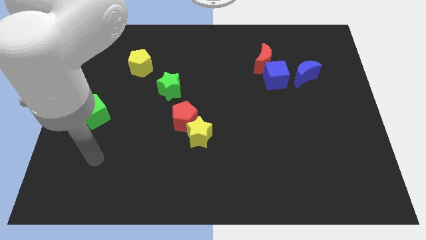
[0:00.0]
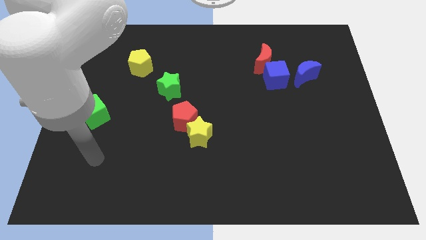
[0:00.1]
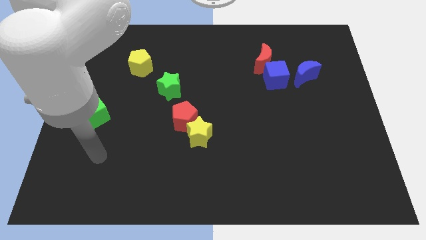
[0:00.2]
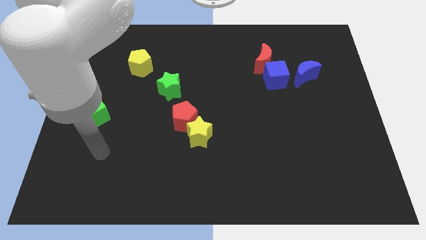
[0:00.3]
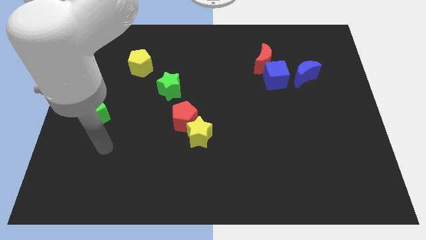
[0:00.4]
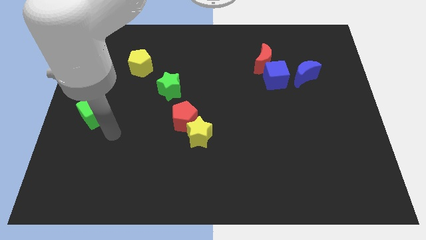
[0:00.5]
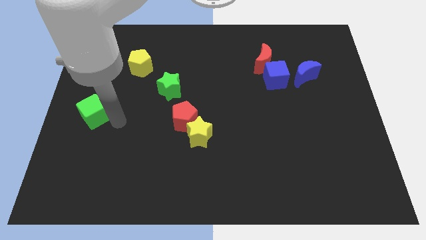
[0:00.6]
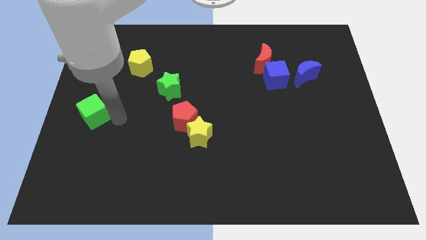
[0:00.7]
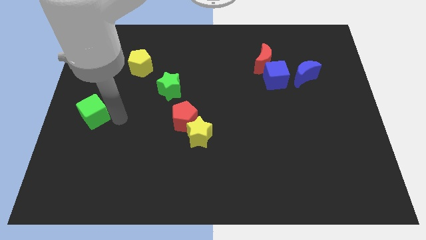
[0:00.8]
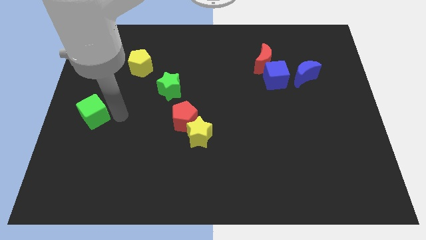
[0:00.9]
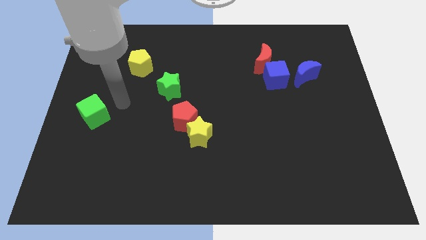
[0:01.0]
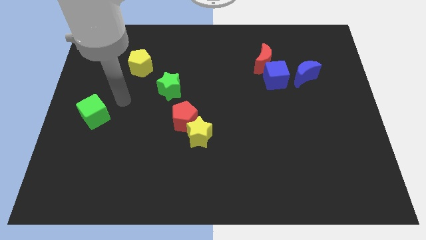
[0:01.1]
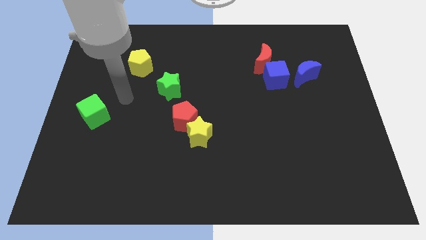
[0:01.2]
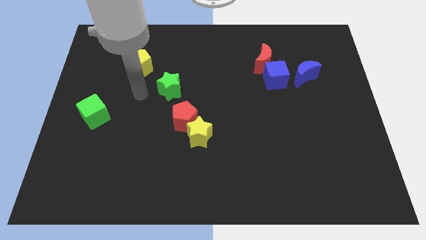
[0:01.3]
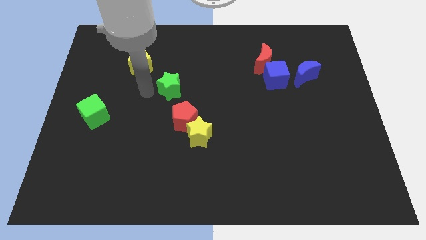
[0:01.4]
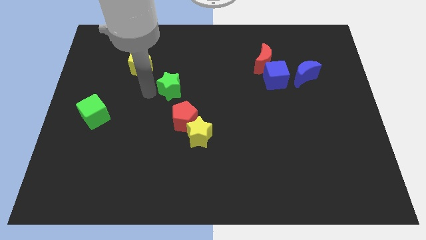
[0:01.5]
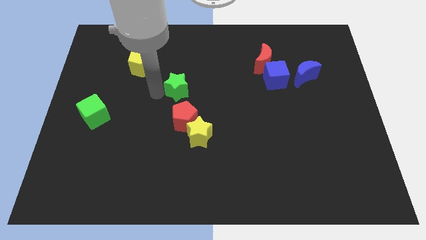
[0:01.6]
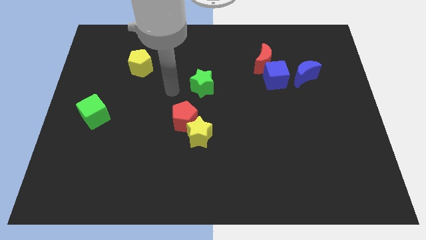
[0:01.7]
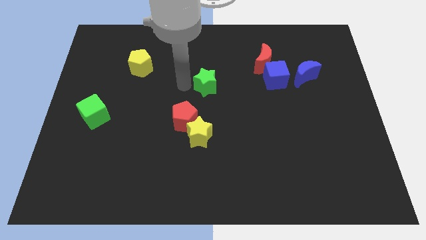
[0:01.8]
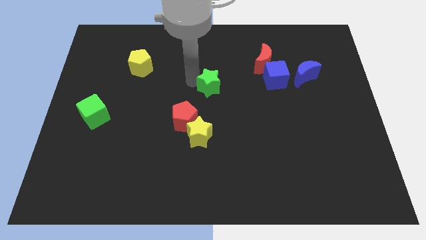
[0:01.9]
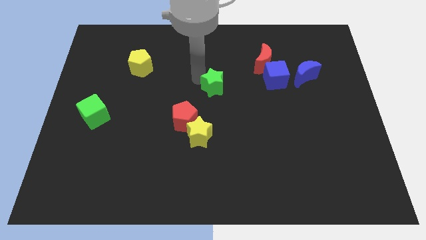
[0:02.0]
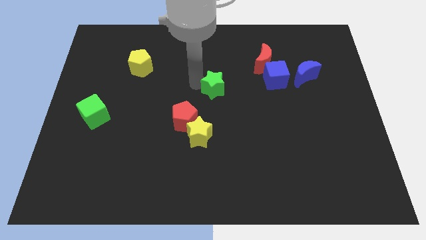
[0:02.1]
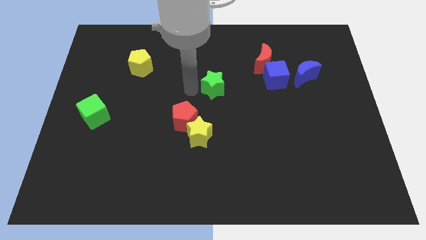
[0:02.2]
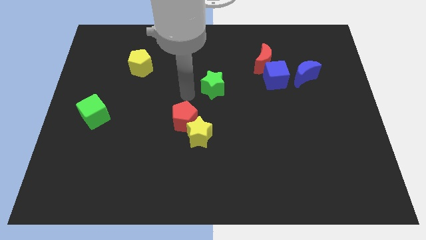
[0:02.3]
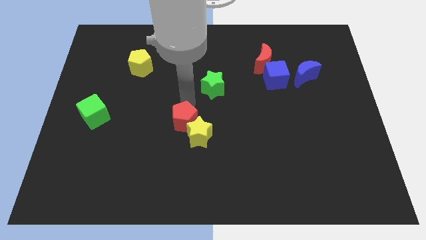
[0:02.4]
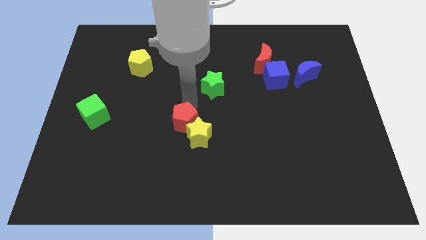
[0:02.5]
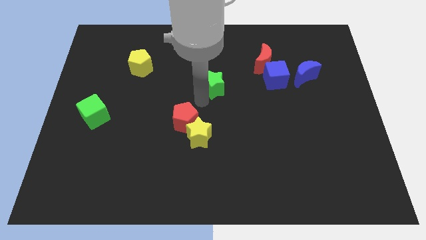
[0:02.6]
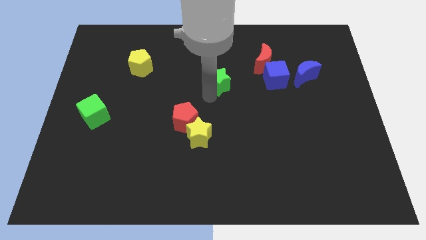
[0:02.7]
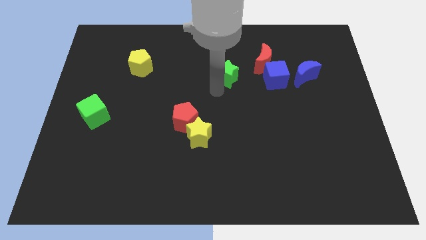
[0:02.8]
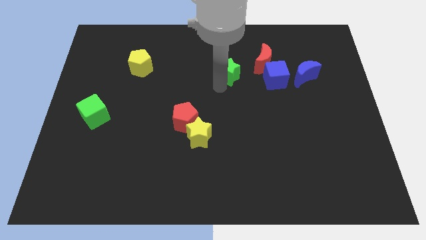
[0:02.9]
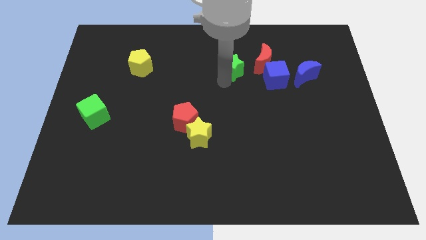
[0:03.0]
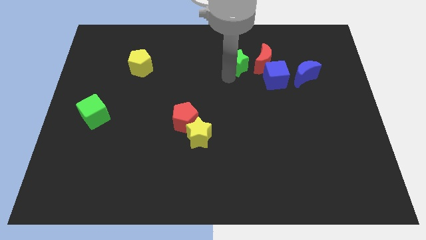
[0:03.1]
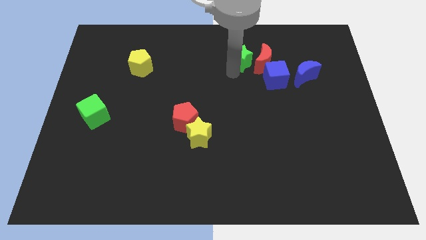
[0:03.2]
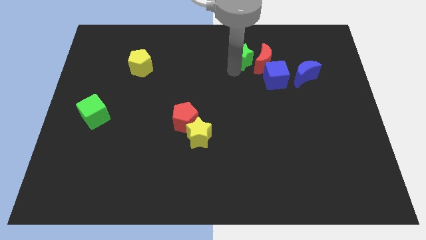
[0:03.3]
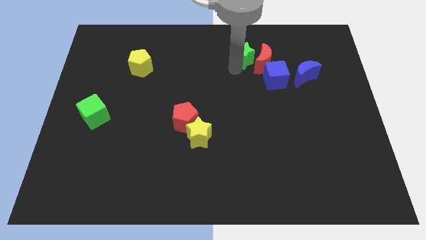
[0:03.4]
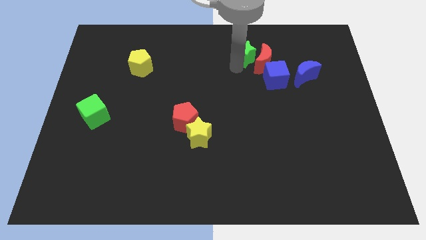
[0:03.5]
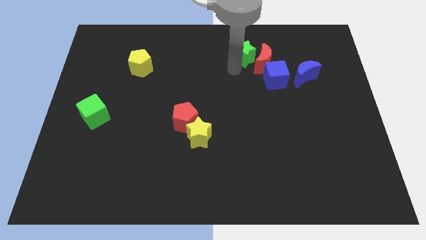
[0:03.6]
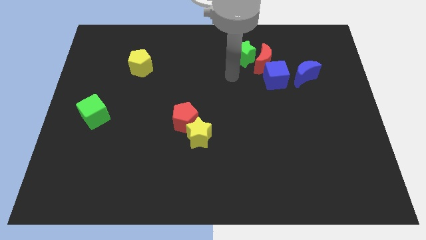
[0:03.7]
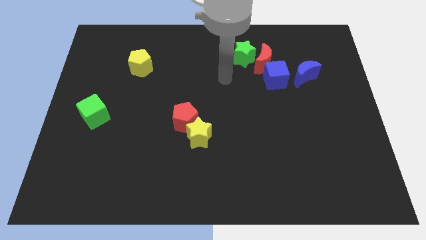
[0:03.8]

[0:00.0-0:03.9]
place the green star diagonally top left to the blue cube

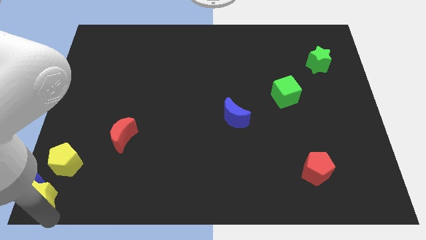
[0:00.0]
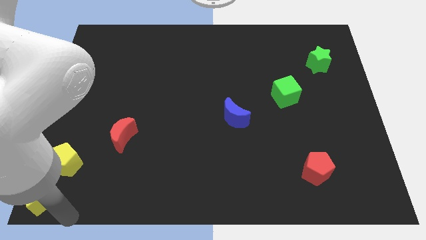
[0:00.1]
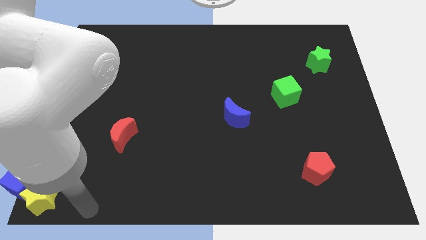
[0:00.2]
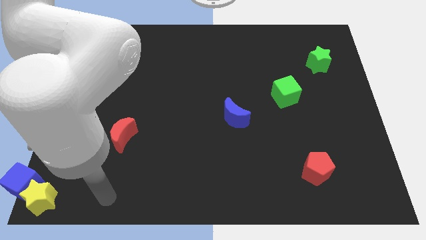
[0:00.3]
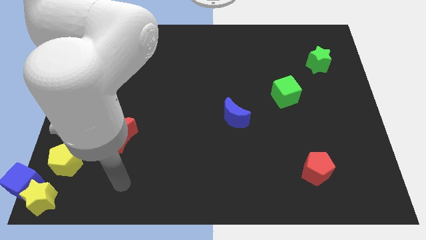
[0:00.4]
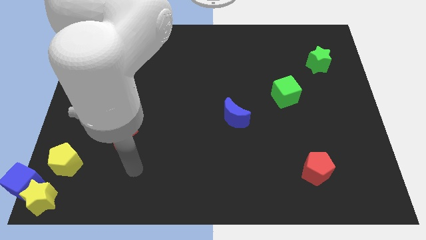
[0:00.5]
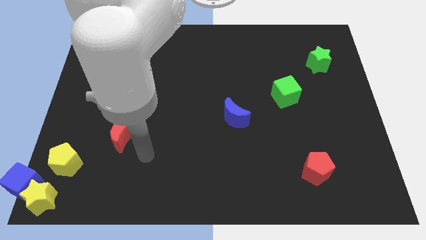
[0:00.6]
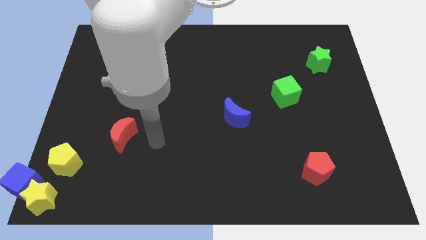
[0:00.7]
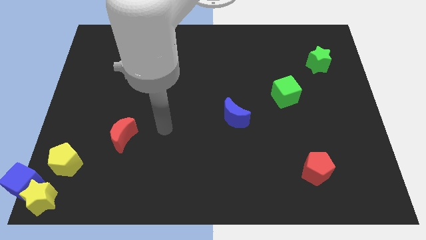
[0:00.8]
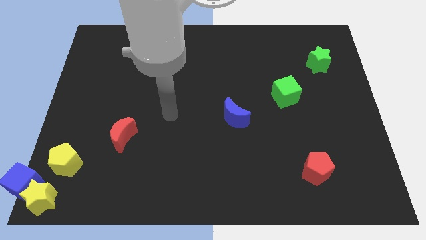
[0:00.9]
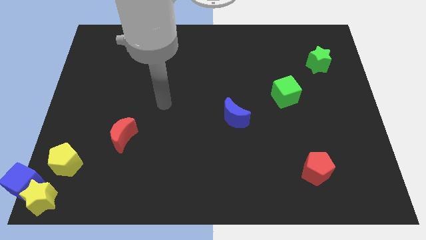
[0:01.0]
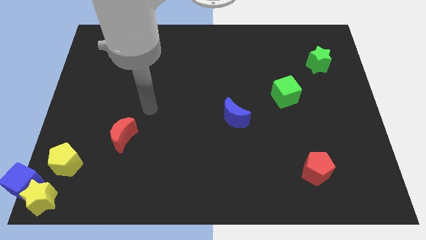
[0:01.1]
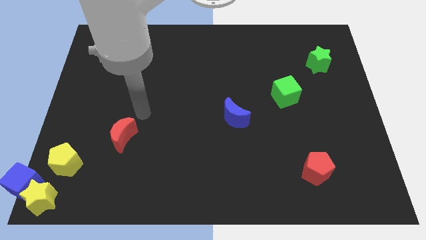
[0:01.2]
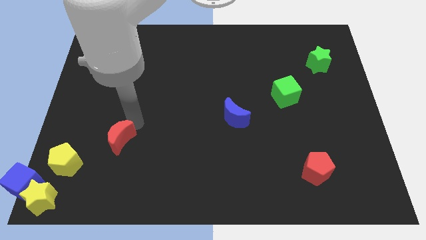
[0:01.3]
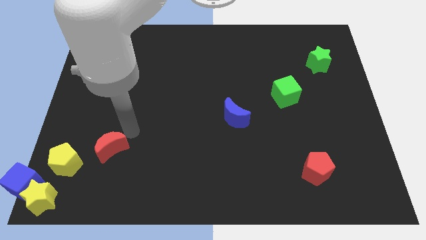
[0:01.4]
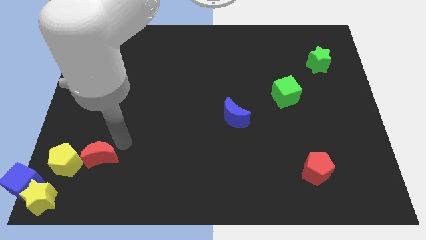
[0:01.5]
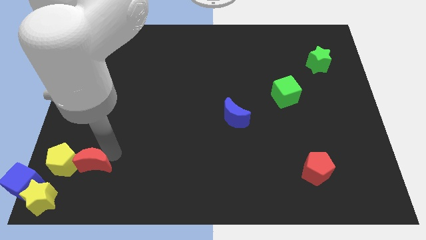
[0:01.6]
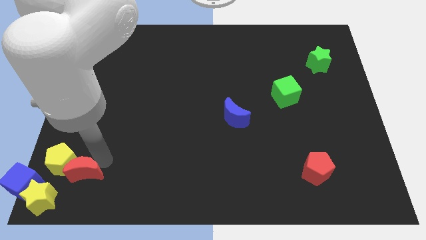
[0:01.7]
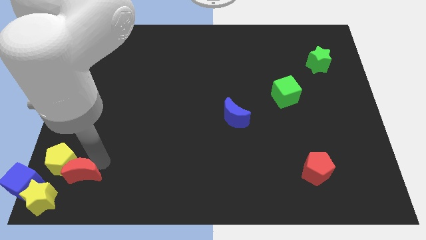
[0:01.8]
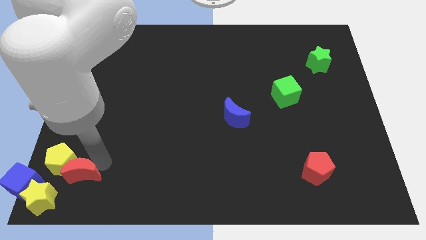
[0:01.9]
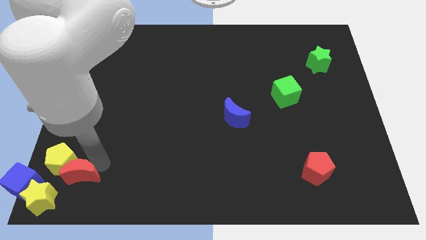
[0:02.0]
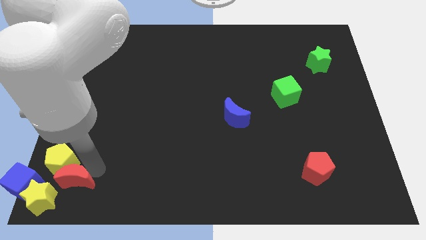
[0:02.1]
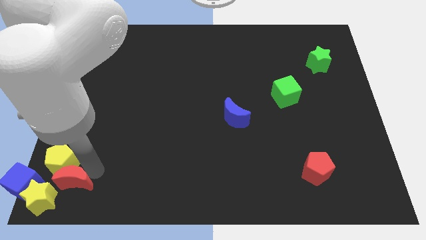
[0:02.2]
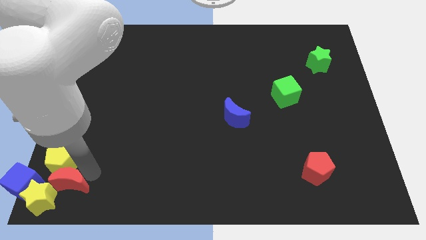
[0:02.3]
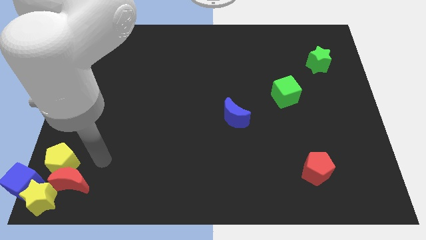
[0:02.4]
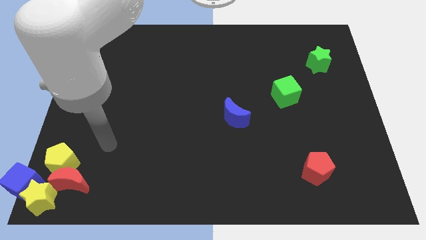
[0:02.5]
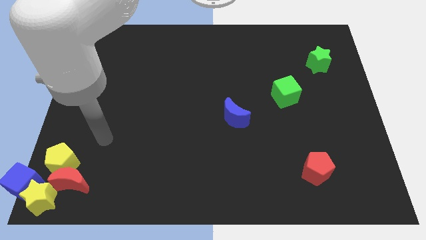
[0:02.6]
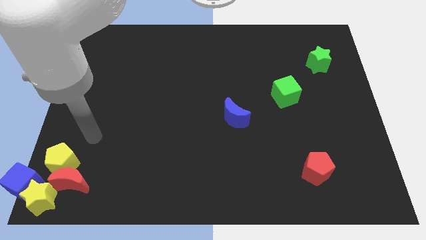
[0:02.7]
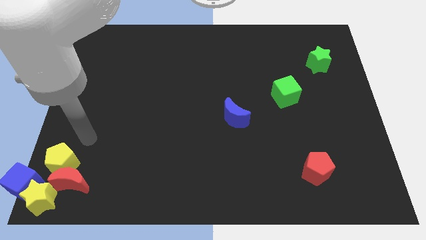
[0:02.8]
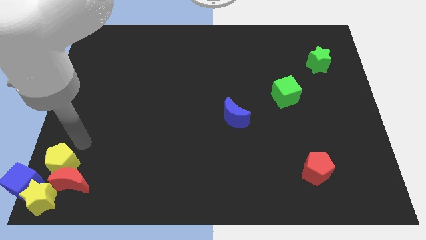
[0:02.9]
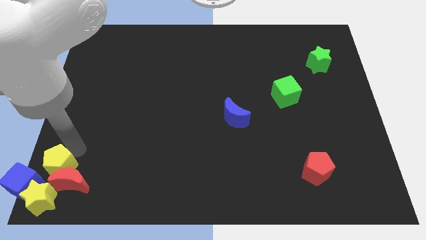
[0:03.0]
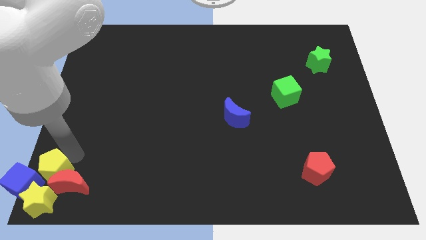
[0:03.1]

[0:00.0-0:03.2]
place red moon to the top right of yellow star

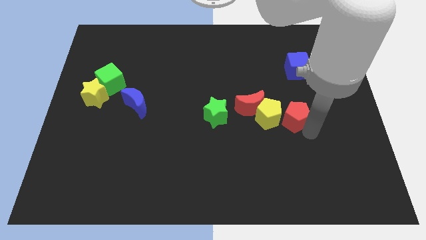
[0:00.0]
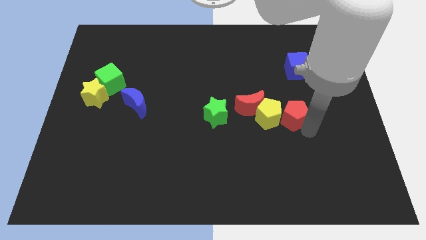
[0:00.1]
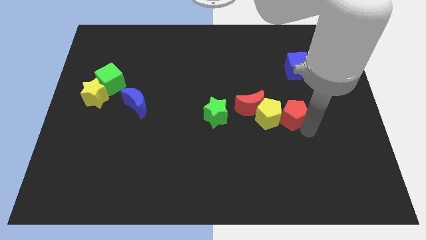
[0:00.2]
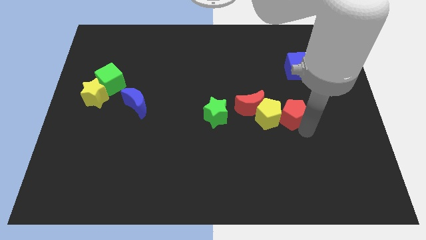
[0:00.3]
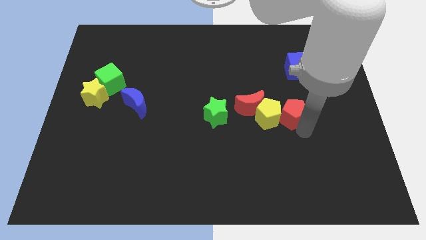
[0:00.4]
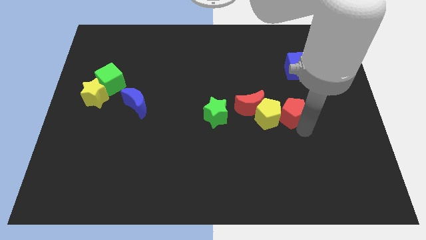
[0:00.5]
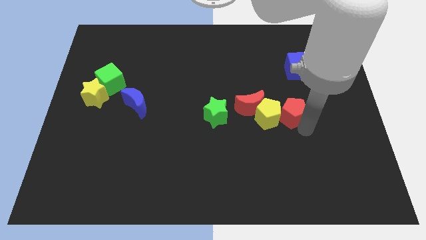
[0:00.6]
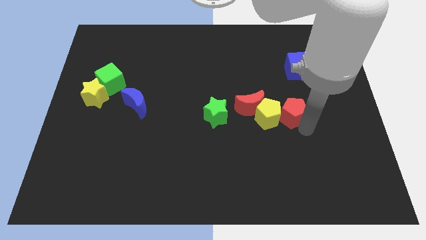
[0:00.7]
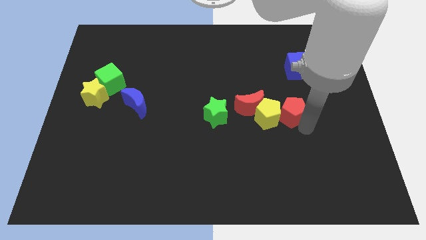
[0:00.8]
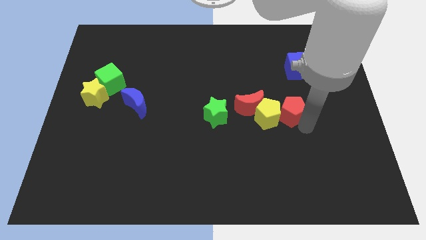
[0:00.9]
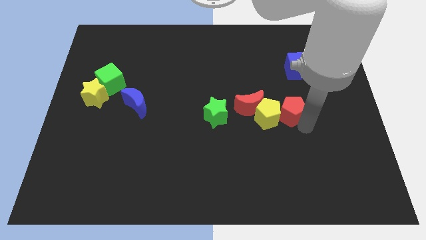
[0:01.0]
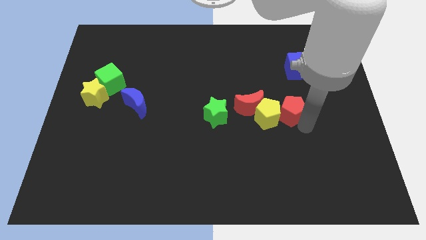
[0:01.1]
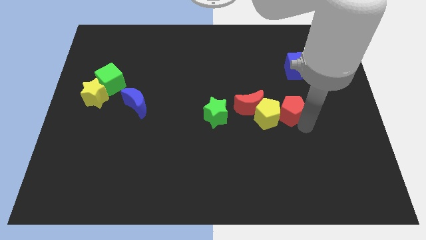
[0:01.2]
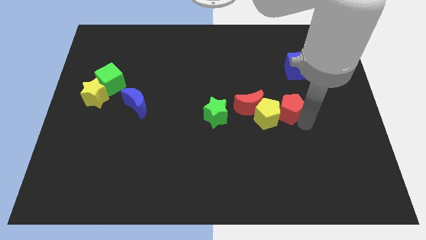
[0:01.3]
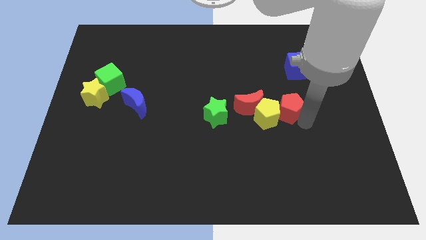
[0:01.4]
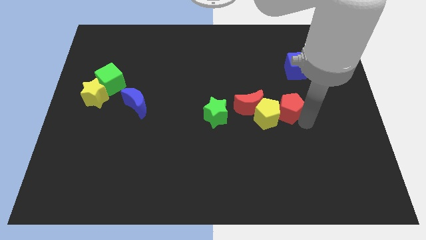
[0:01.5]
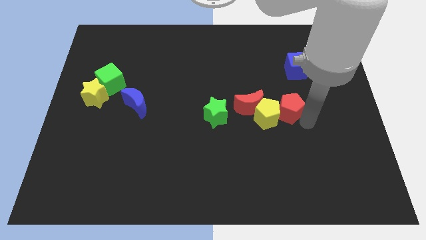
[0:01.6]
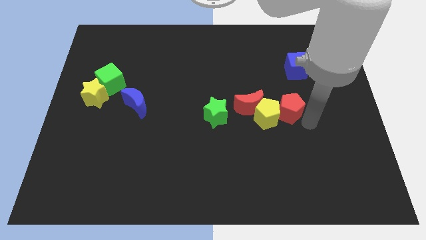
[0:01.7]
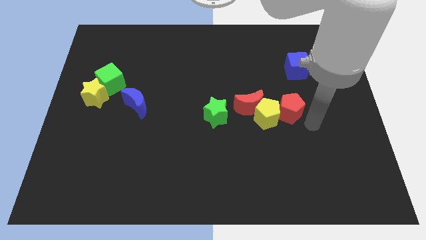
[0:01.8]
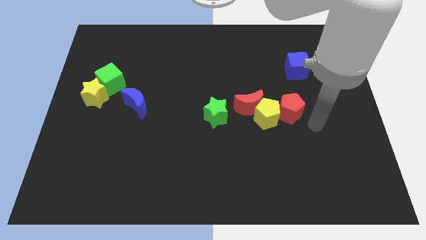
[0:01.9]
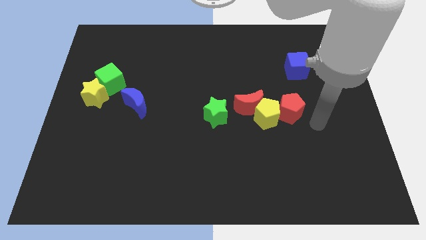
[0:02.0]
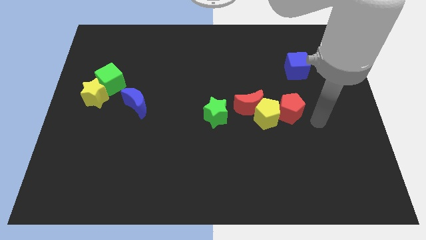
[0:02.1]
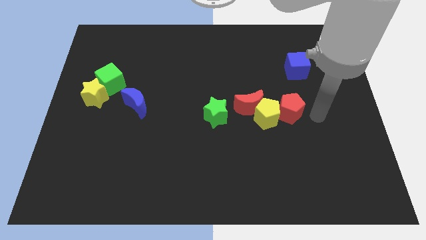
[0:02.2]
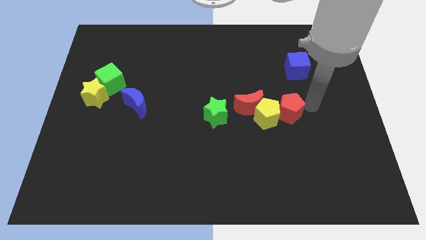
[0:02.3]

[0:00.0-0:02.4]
move the red pentagon beside the yellow pentagon
